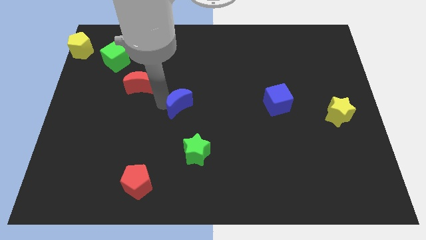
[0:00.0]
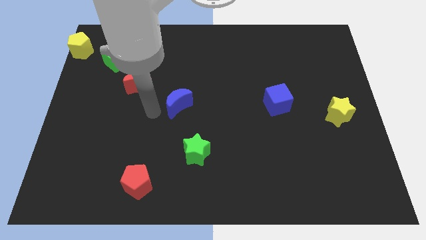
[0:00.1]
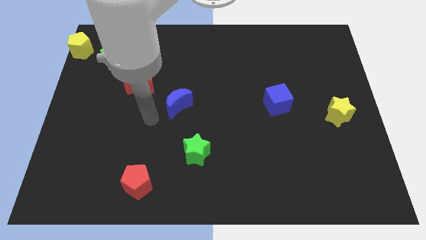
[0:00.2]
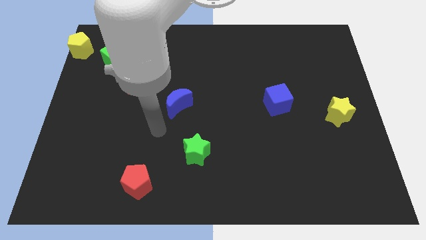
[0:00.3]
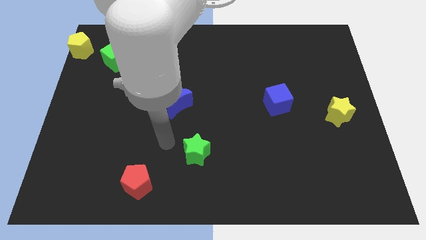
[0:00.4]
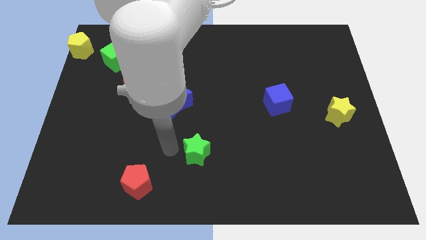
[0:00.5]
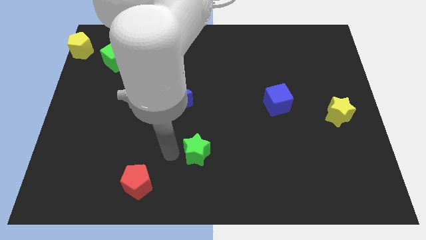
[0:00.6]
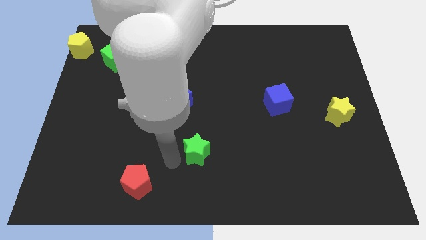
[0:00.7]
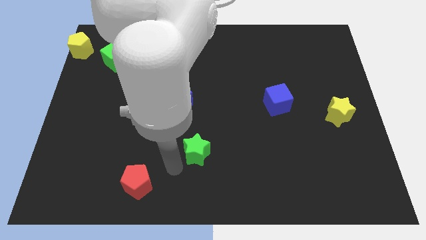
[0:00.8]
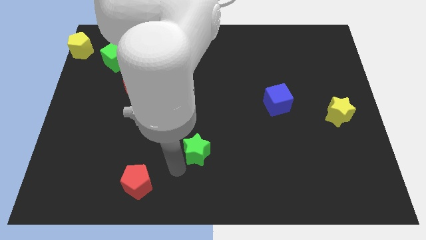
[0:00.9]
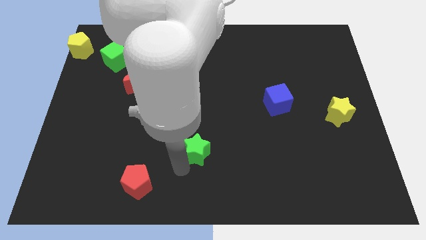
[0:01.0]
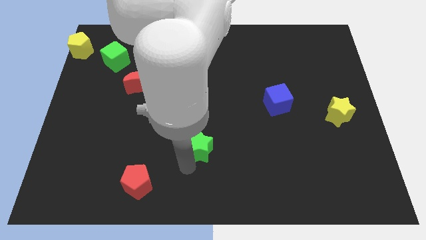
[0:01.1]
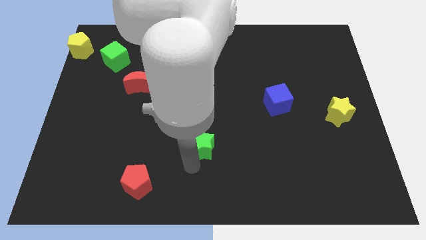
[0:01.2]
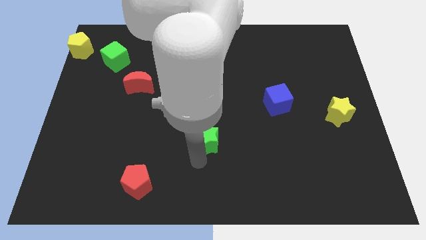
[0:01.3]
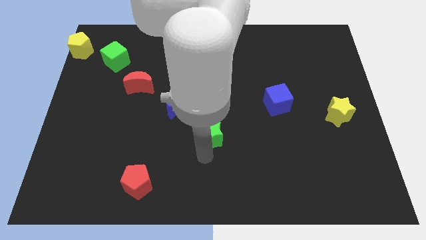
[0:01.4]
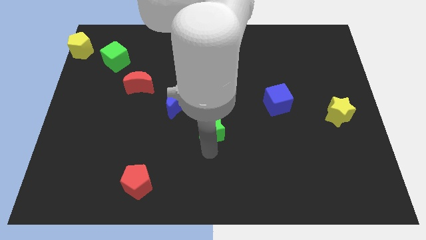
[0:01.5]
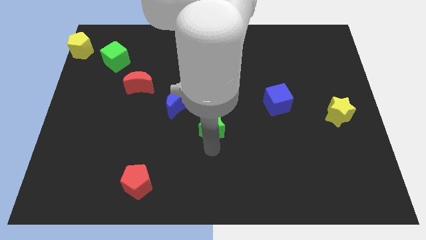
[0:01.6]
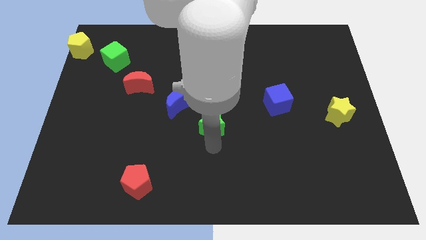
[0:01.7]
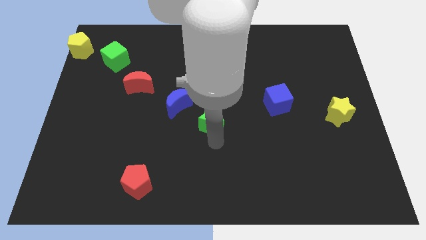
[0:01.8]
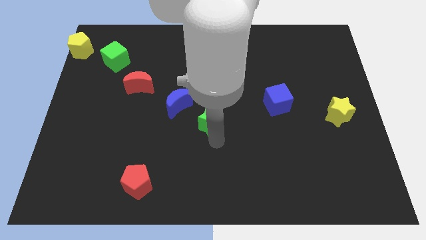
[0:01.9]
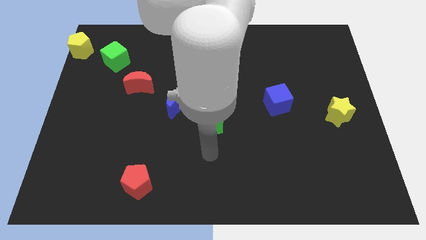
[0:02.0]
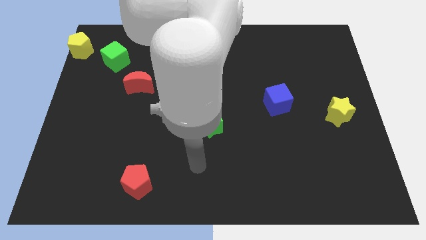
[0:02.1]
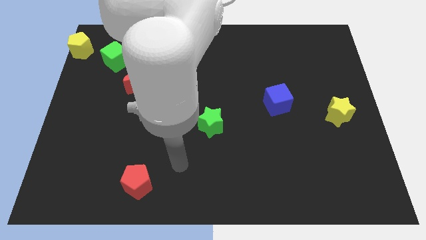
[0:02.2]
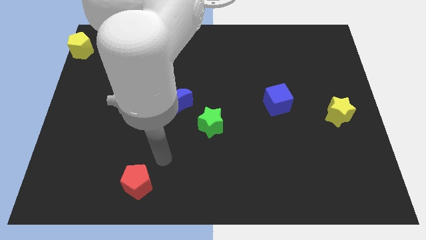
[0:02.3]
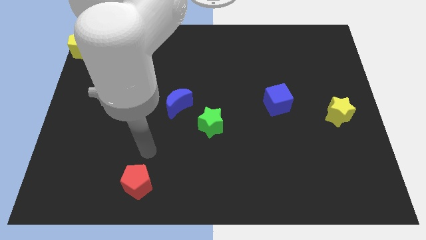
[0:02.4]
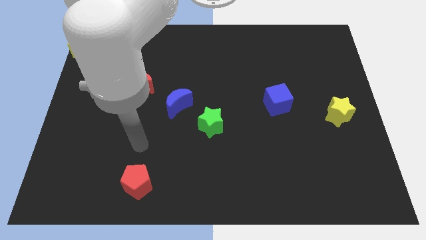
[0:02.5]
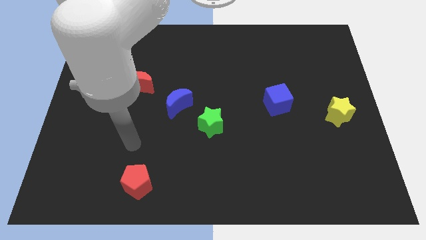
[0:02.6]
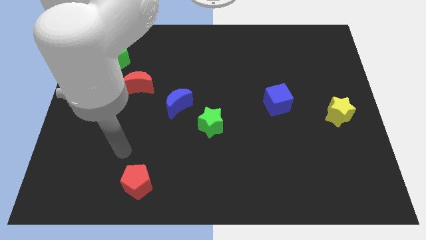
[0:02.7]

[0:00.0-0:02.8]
push the green star to the center of the board

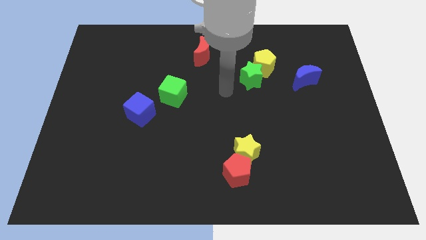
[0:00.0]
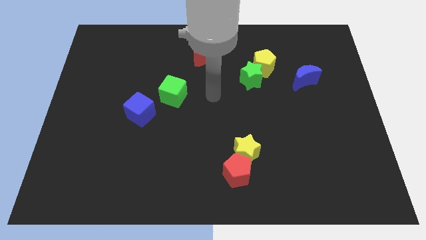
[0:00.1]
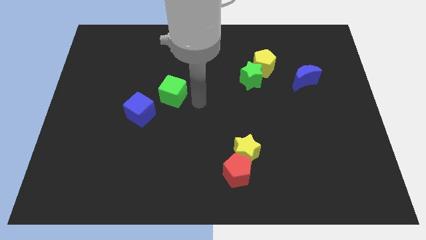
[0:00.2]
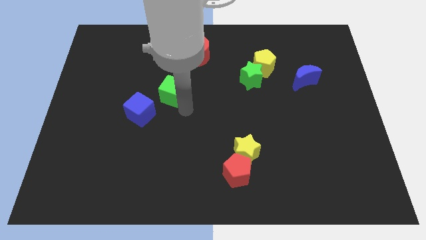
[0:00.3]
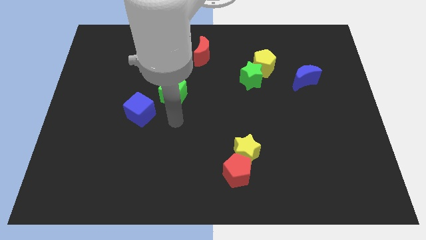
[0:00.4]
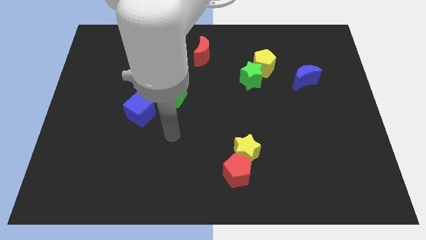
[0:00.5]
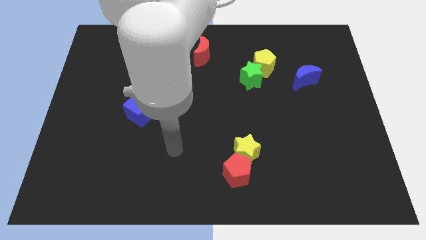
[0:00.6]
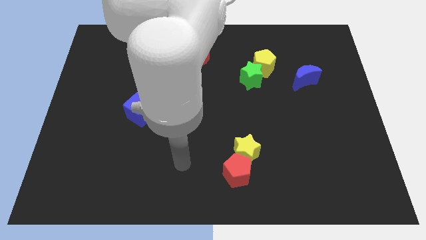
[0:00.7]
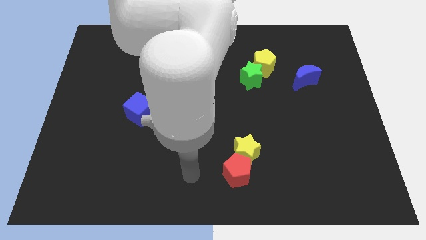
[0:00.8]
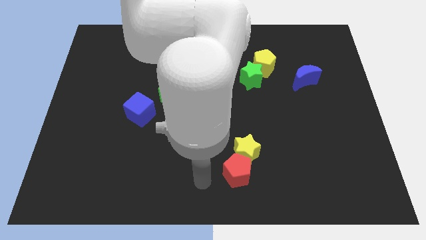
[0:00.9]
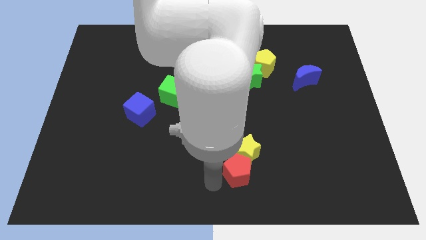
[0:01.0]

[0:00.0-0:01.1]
move yourself to the bottom left of the red pentagon

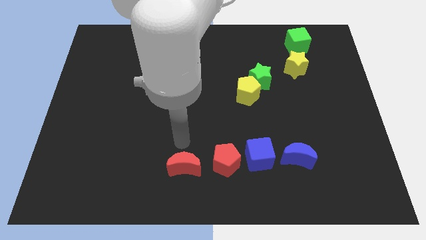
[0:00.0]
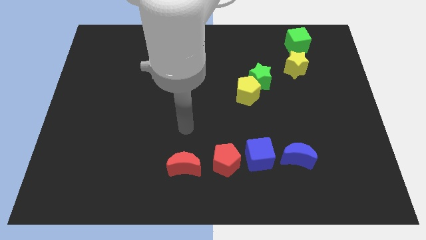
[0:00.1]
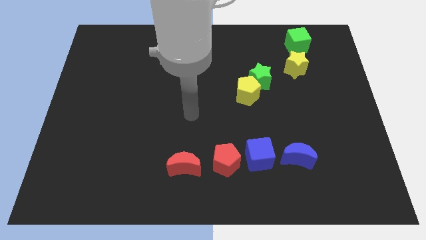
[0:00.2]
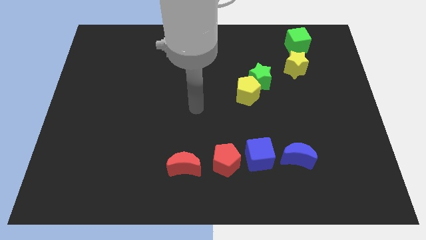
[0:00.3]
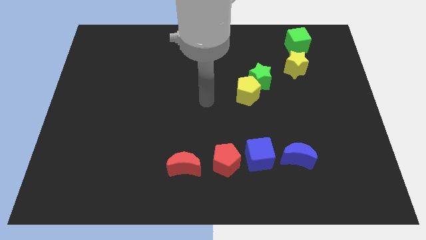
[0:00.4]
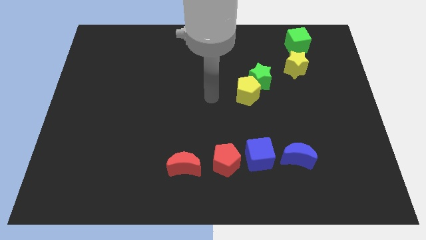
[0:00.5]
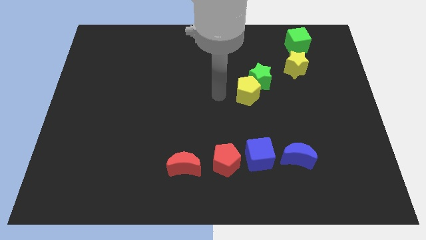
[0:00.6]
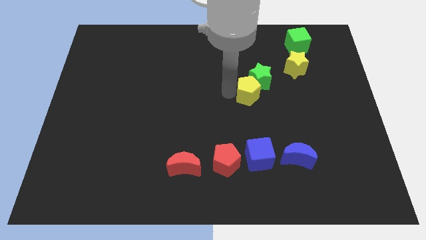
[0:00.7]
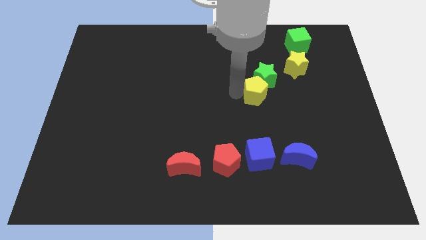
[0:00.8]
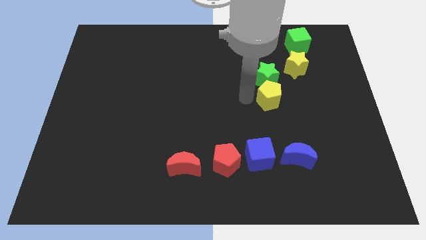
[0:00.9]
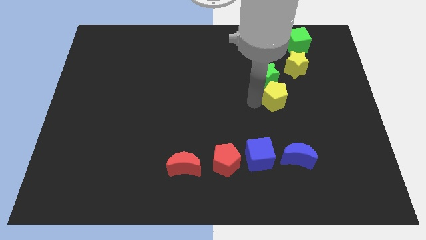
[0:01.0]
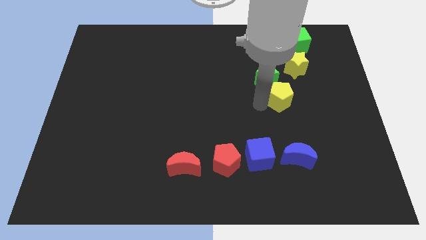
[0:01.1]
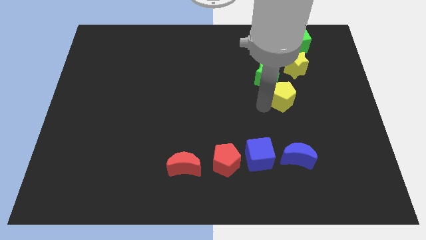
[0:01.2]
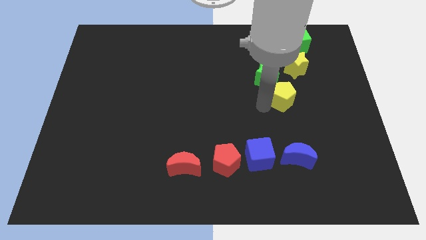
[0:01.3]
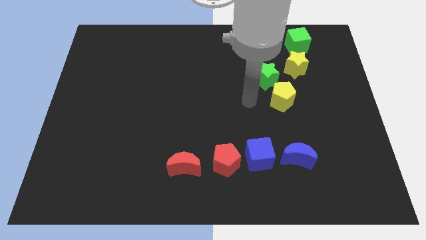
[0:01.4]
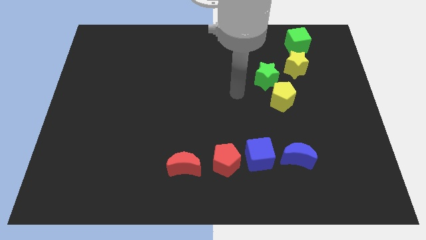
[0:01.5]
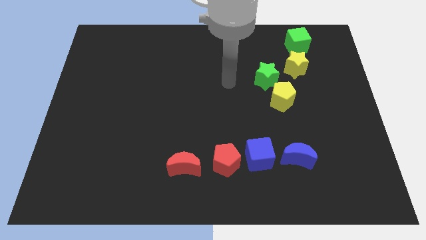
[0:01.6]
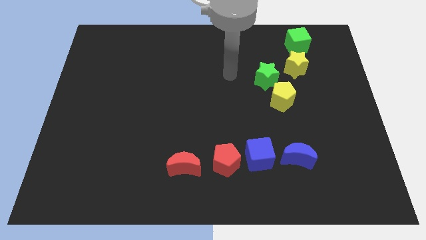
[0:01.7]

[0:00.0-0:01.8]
separate the yellow pentagon from the green star

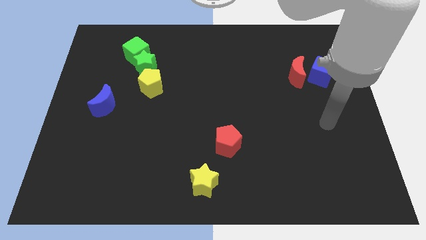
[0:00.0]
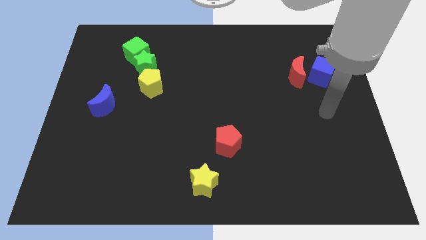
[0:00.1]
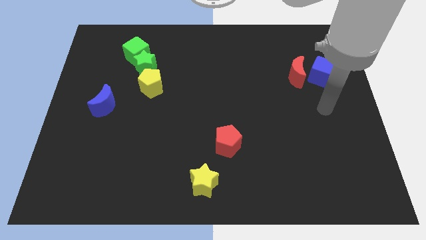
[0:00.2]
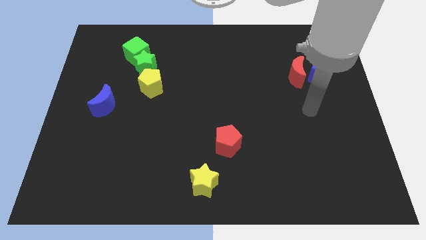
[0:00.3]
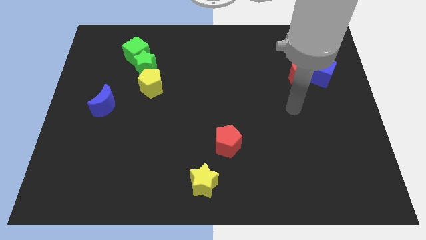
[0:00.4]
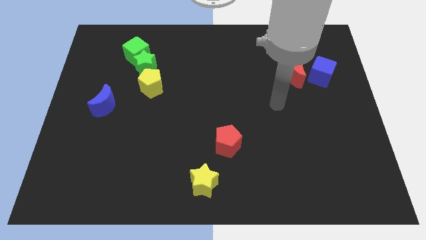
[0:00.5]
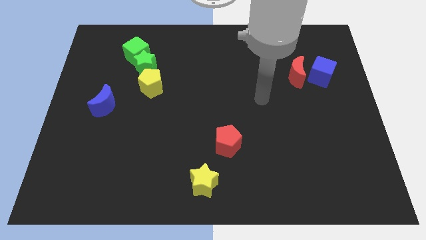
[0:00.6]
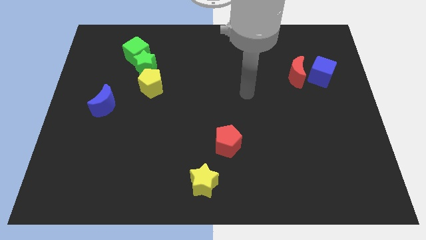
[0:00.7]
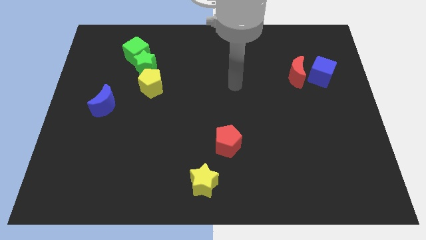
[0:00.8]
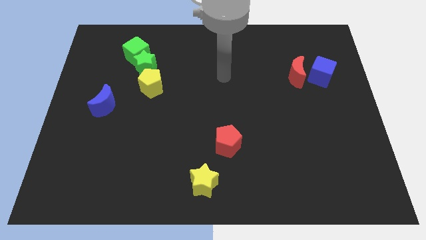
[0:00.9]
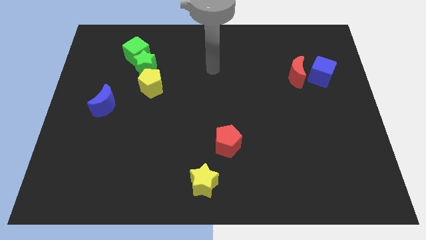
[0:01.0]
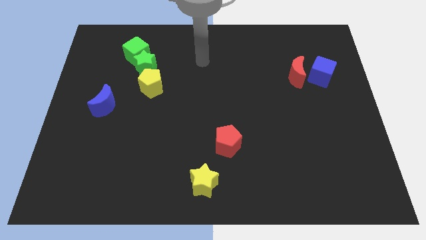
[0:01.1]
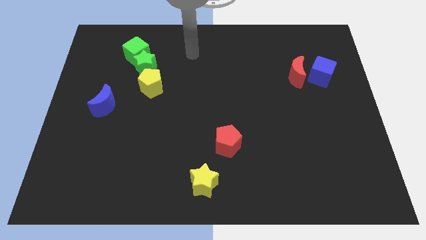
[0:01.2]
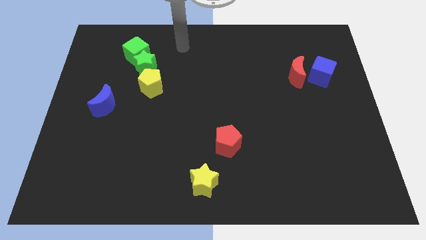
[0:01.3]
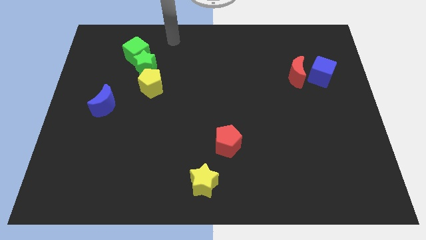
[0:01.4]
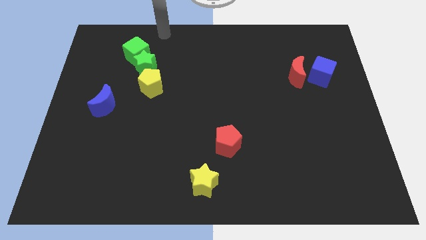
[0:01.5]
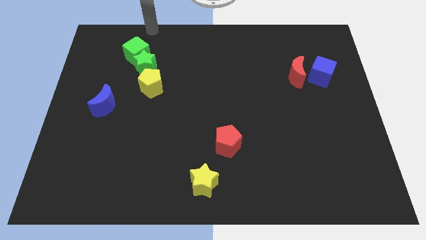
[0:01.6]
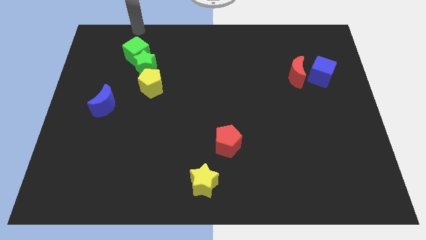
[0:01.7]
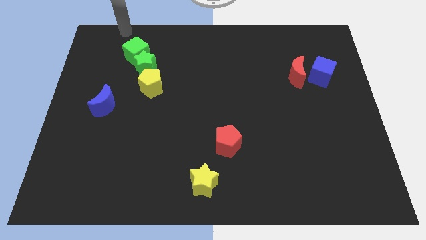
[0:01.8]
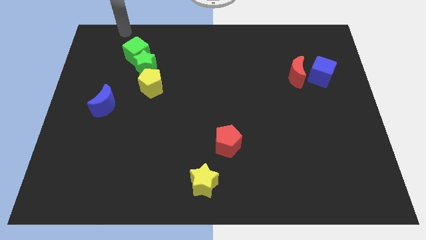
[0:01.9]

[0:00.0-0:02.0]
move the arm towards the green cube

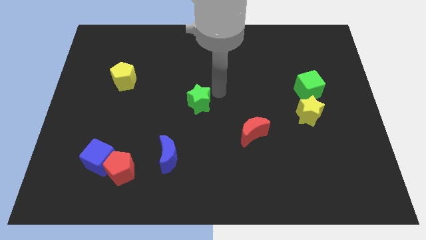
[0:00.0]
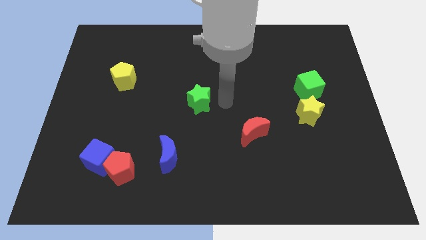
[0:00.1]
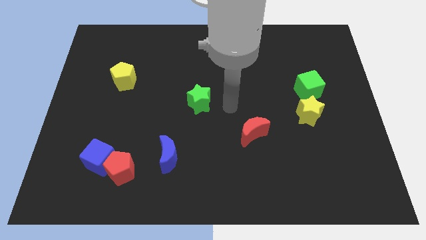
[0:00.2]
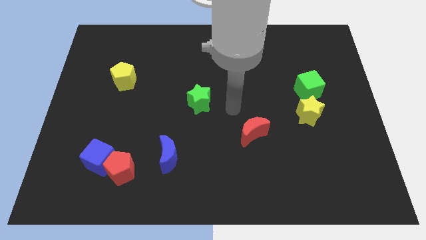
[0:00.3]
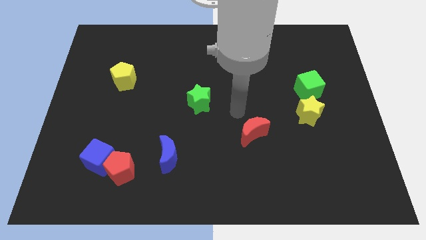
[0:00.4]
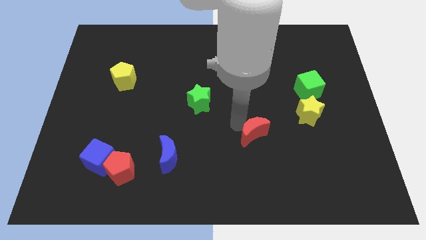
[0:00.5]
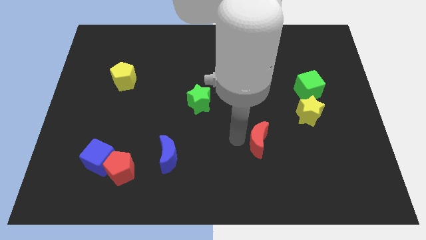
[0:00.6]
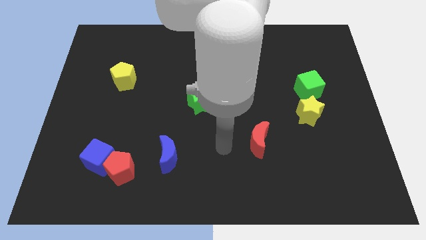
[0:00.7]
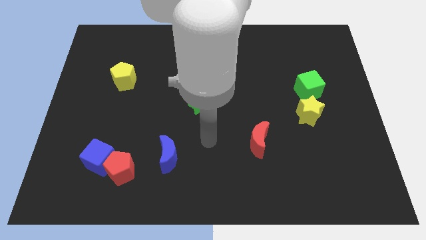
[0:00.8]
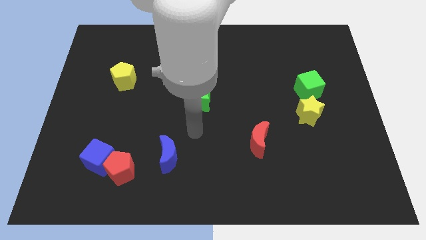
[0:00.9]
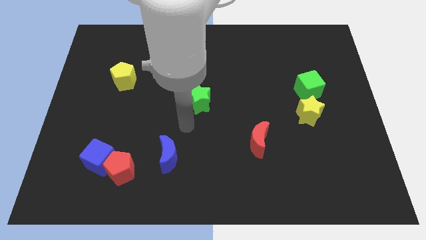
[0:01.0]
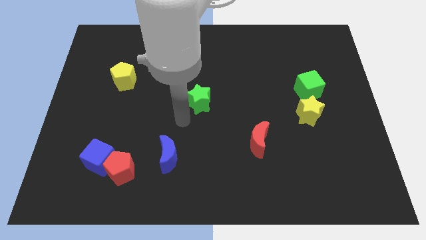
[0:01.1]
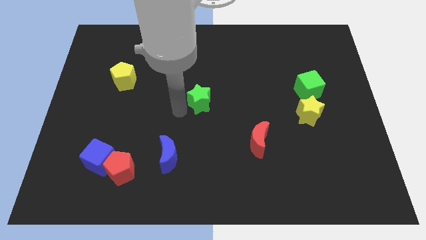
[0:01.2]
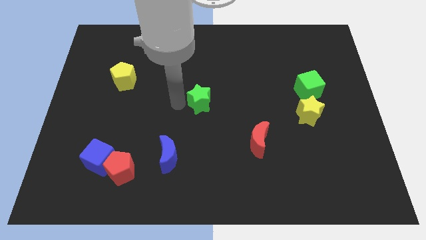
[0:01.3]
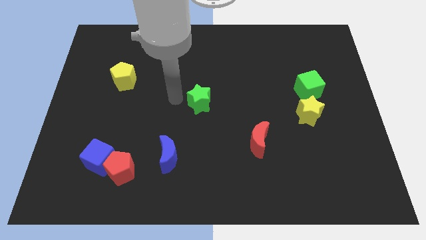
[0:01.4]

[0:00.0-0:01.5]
hit the red moon
